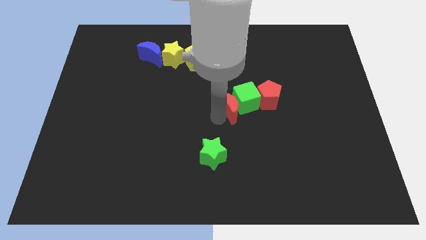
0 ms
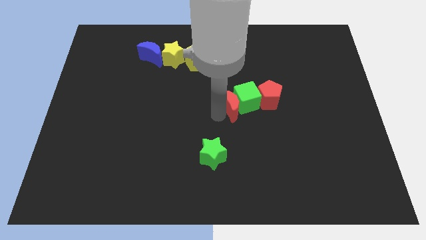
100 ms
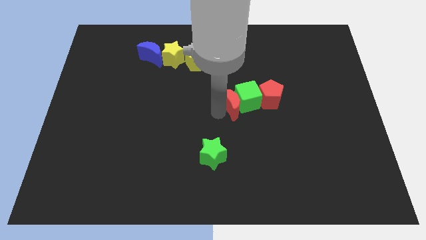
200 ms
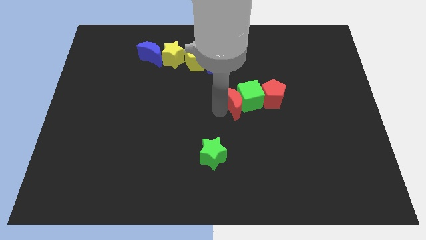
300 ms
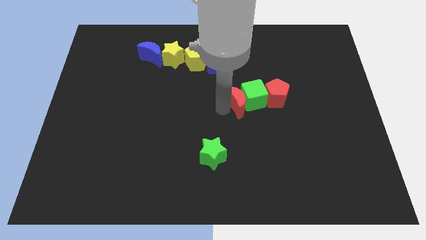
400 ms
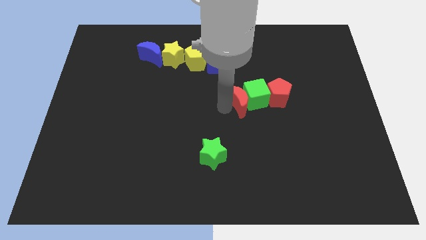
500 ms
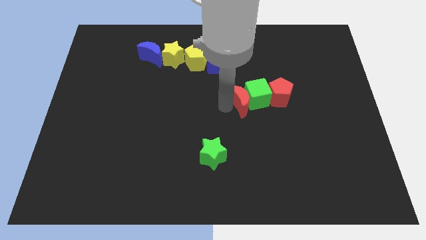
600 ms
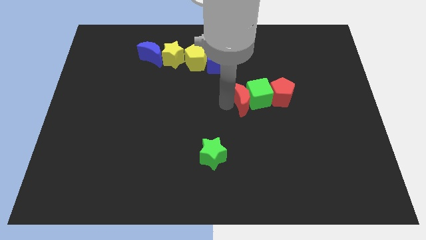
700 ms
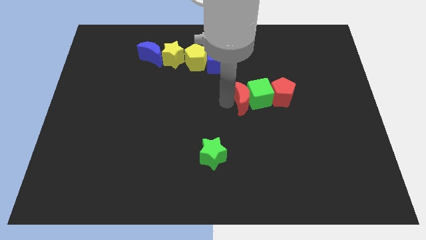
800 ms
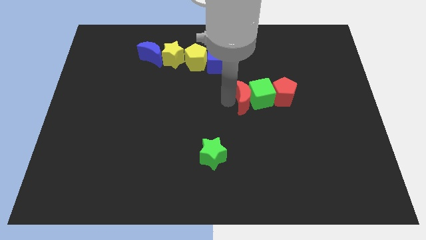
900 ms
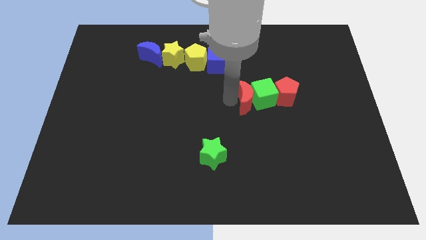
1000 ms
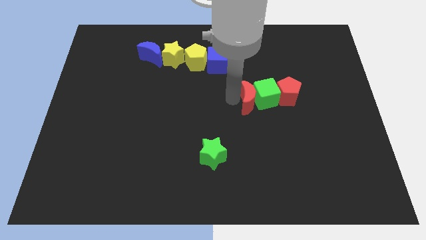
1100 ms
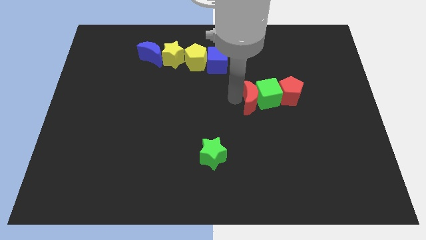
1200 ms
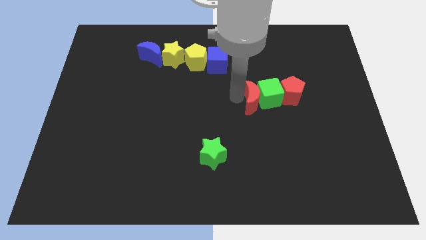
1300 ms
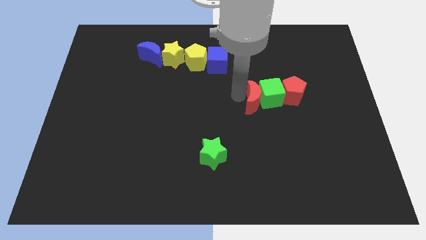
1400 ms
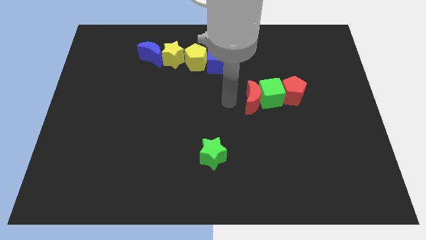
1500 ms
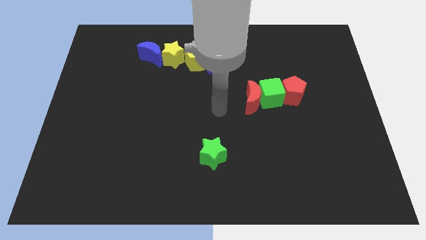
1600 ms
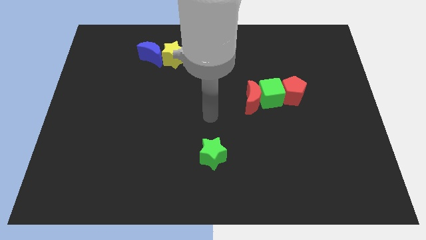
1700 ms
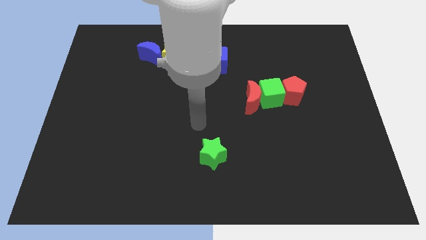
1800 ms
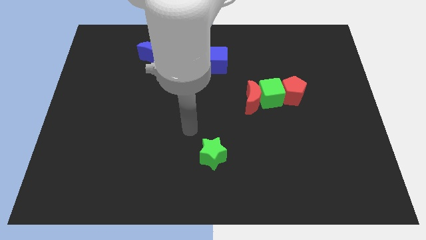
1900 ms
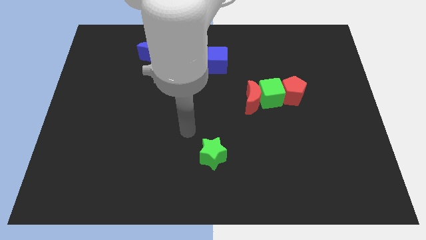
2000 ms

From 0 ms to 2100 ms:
move the red crescent into the green cube

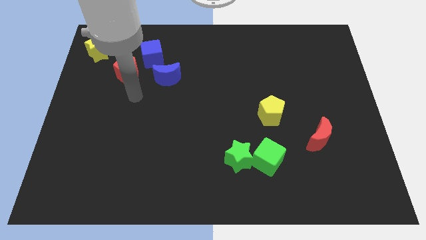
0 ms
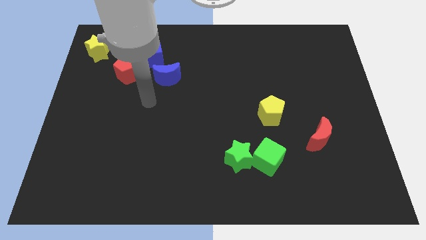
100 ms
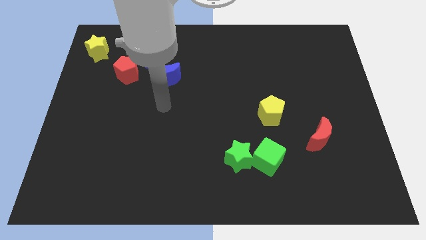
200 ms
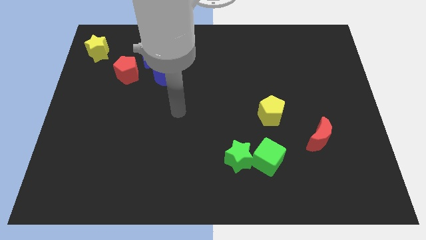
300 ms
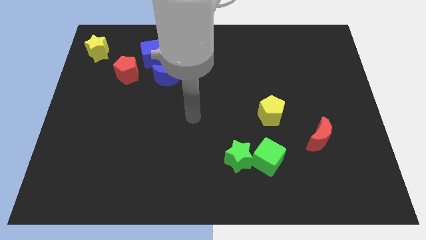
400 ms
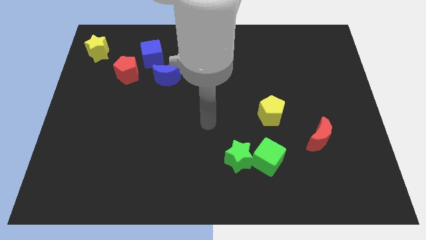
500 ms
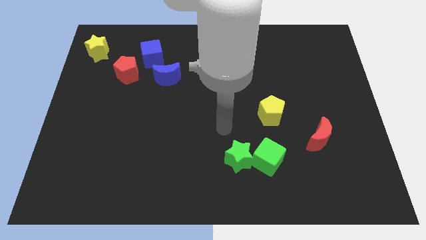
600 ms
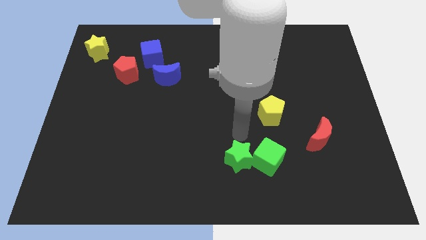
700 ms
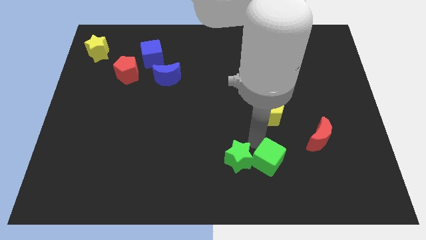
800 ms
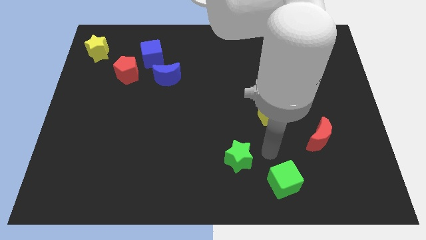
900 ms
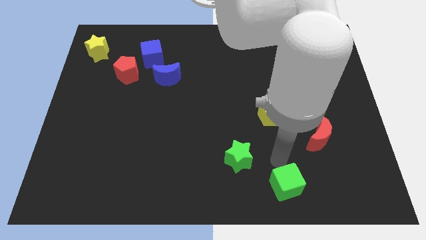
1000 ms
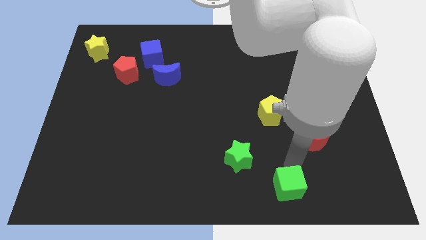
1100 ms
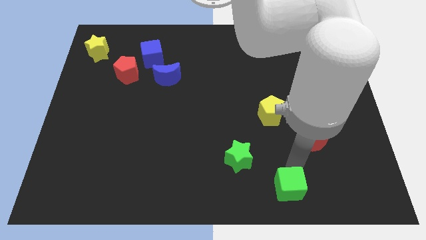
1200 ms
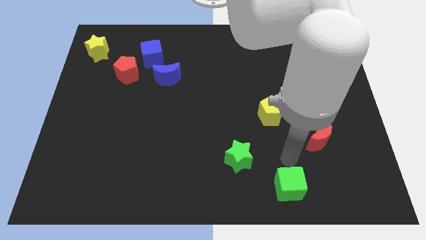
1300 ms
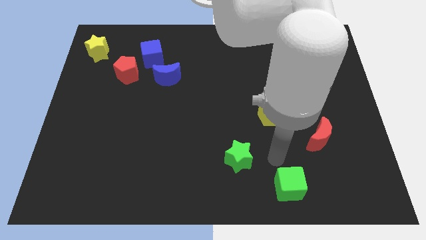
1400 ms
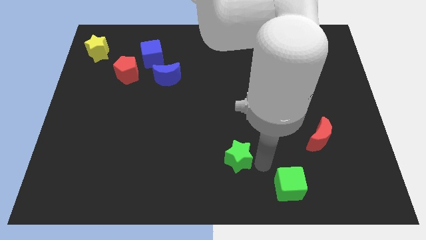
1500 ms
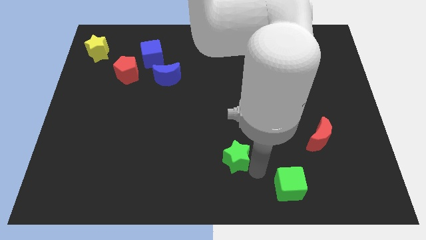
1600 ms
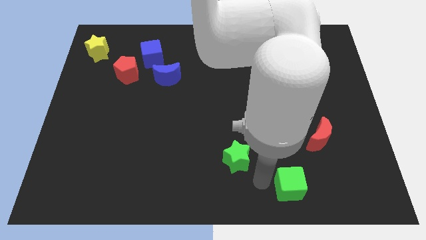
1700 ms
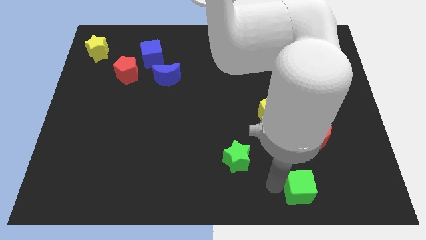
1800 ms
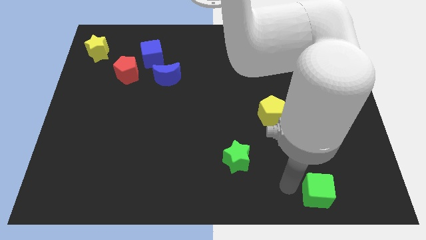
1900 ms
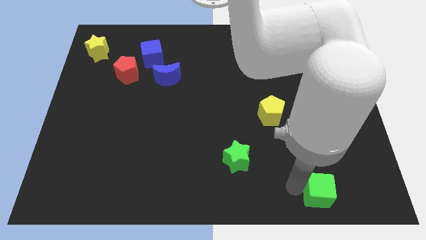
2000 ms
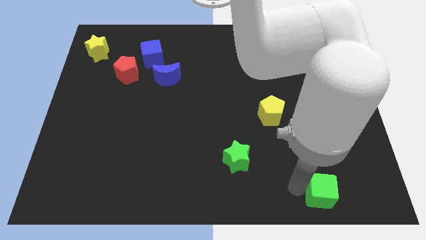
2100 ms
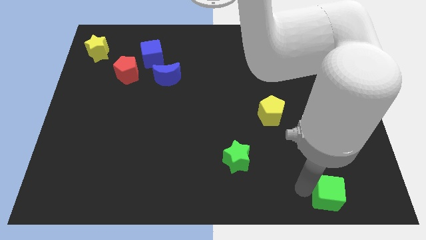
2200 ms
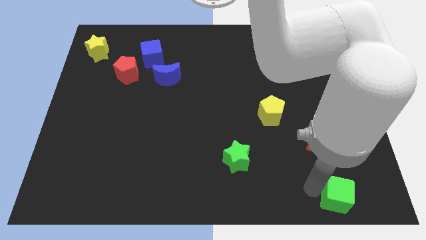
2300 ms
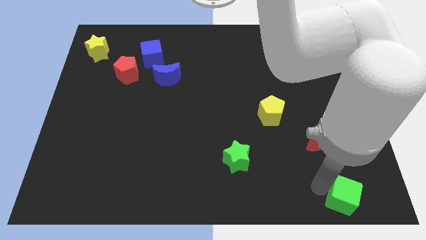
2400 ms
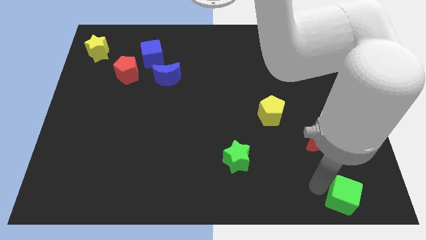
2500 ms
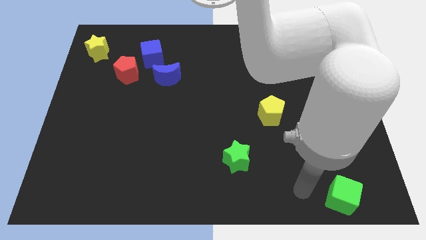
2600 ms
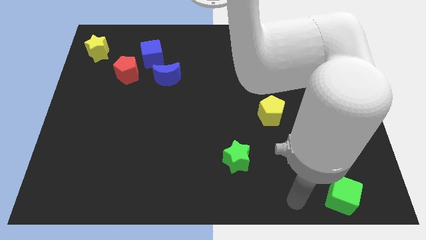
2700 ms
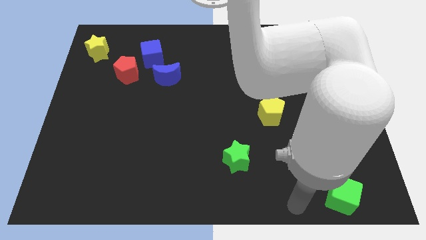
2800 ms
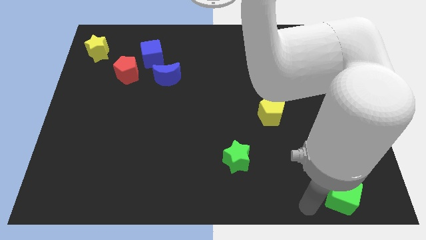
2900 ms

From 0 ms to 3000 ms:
place the green cube below the red moon

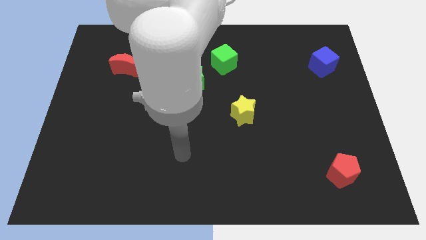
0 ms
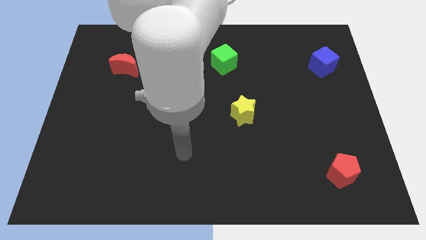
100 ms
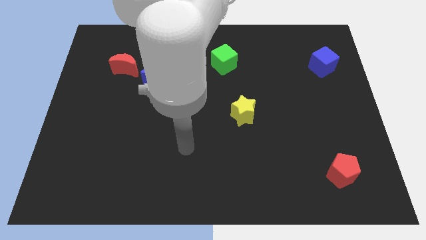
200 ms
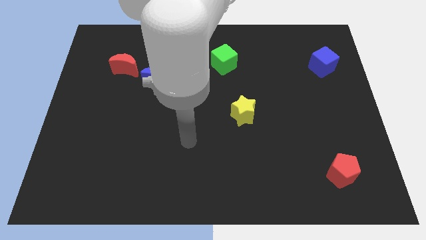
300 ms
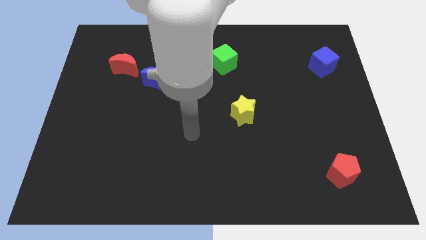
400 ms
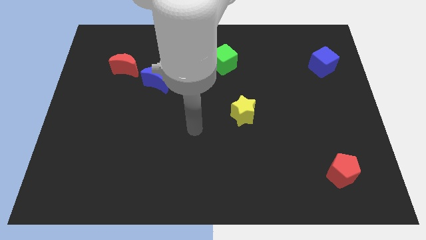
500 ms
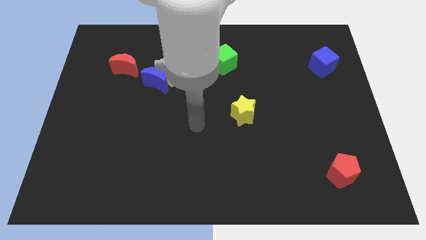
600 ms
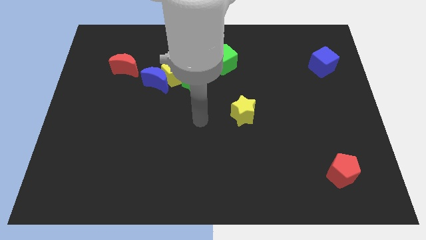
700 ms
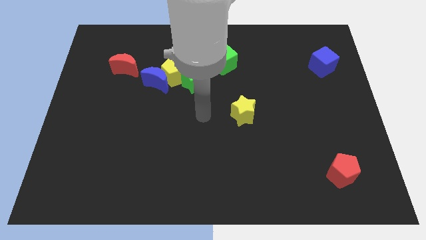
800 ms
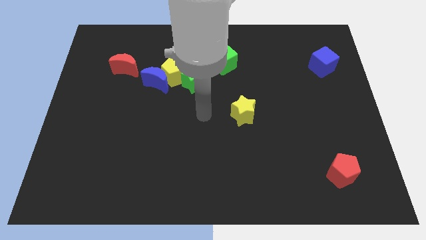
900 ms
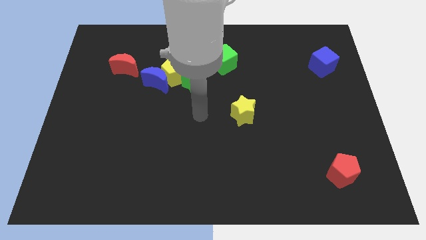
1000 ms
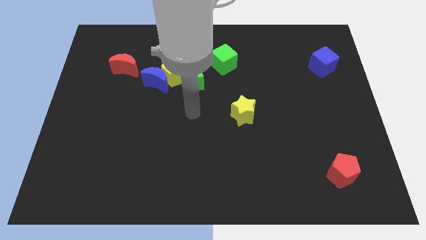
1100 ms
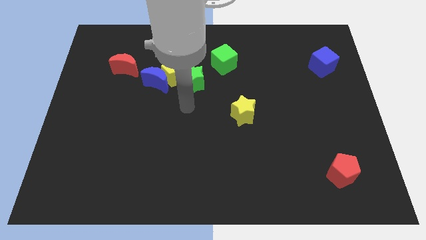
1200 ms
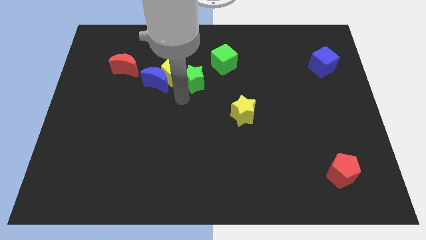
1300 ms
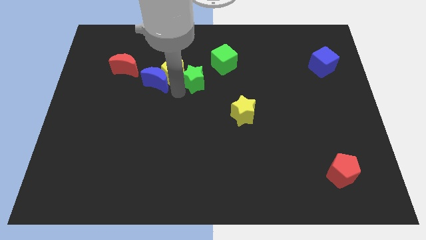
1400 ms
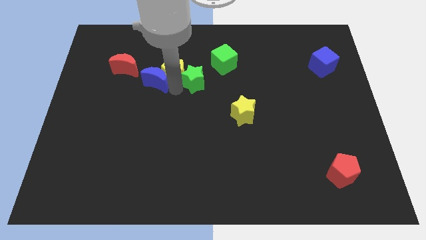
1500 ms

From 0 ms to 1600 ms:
move your arm to the left of the green star

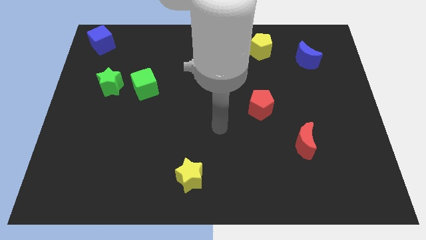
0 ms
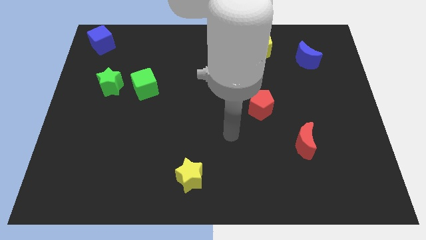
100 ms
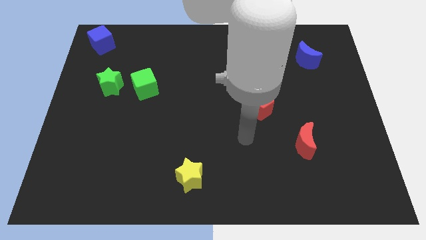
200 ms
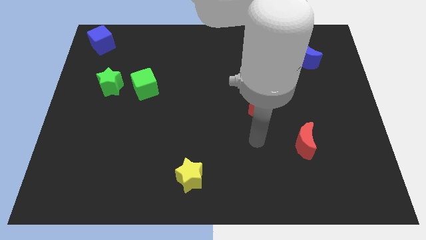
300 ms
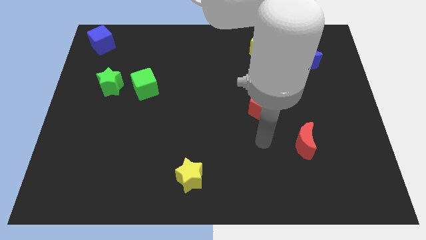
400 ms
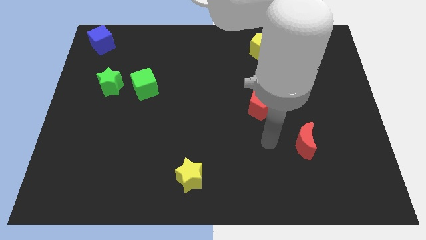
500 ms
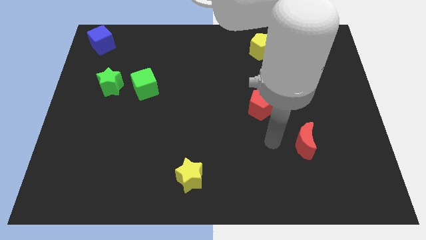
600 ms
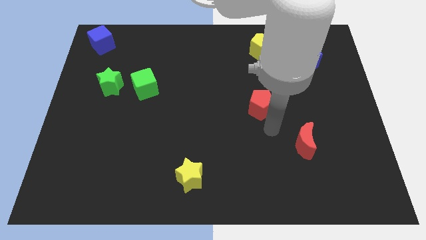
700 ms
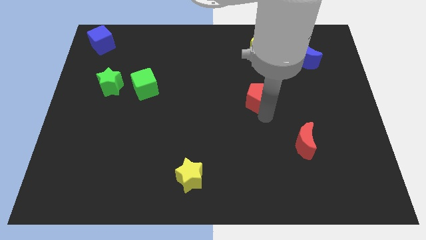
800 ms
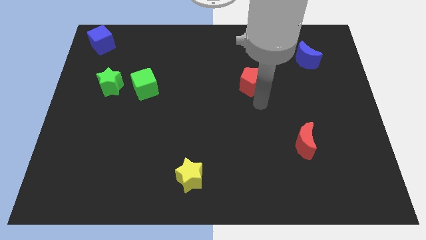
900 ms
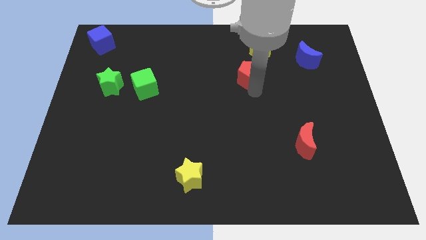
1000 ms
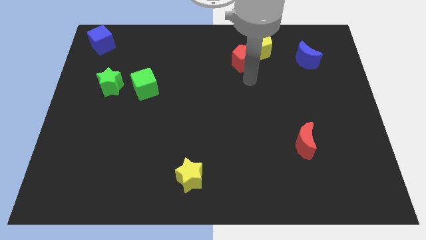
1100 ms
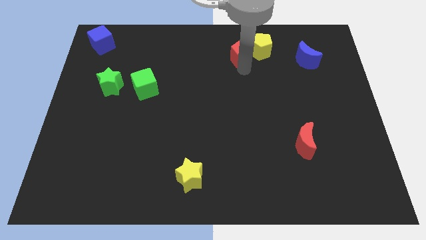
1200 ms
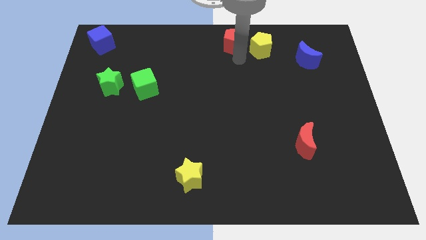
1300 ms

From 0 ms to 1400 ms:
place red pentagon to the left of yellow pentagon

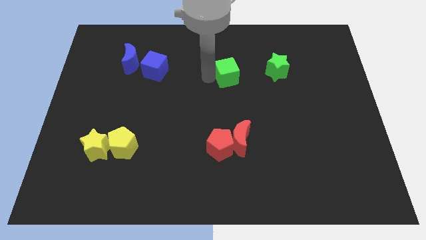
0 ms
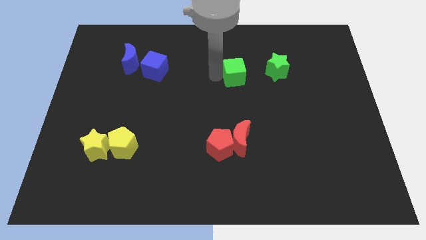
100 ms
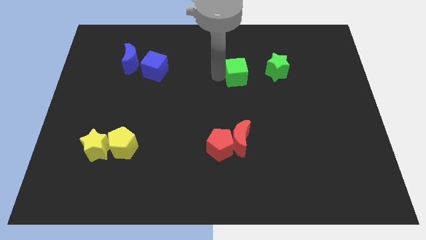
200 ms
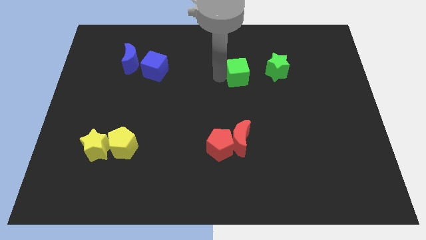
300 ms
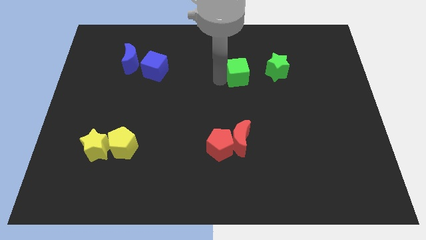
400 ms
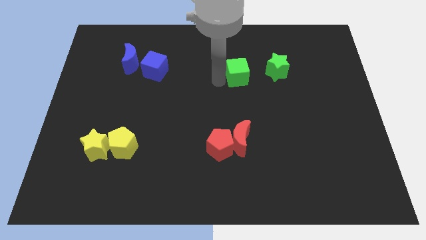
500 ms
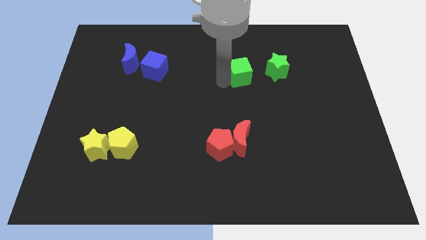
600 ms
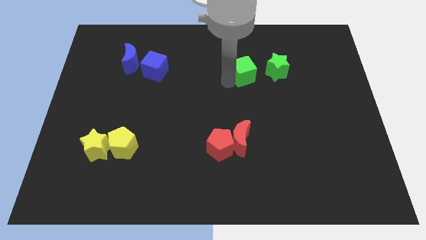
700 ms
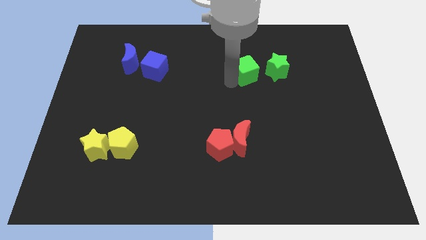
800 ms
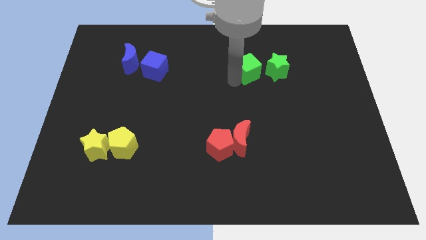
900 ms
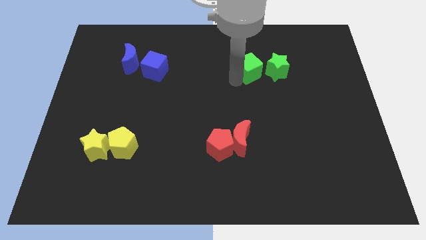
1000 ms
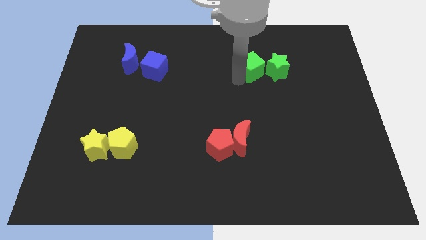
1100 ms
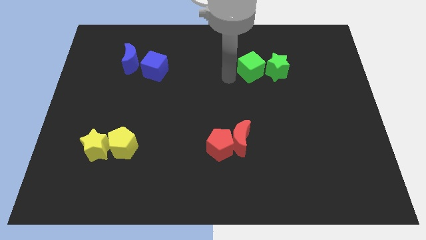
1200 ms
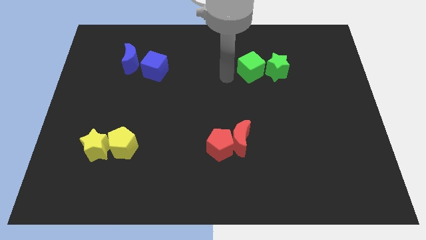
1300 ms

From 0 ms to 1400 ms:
move the green cube to the left of the green star
